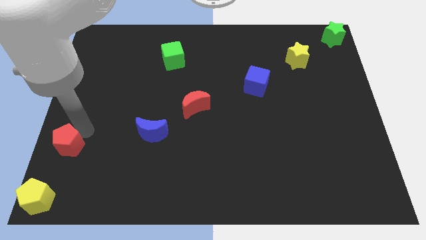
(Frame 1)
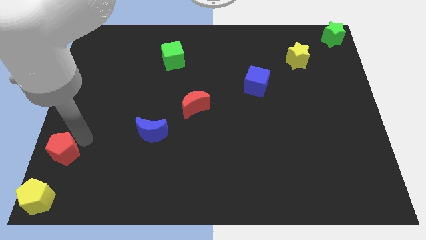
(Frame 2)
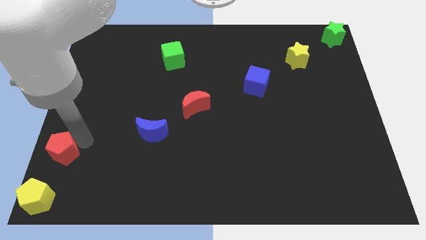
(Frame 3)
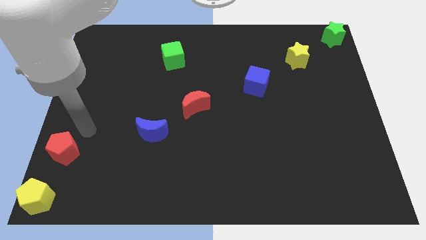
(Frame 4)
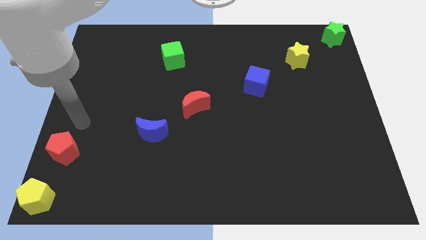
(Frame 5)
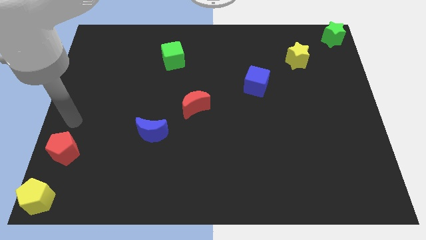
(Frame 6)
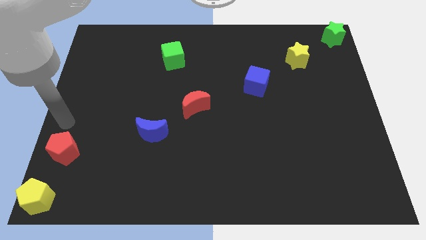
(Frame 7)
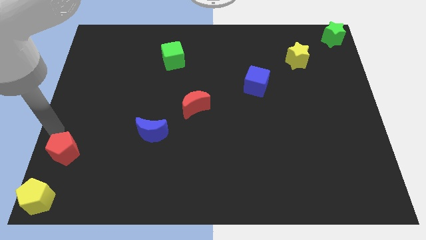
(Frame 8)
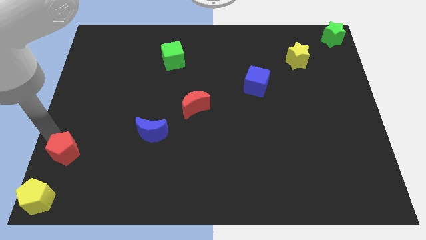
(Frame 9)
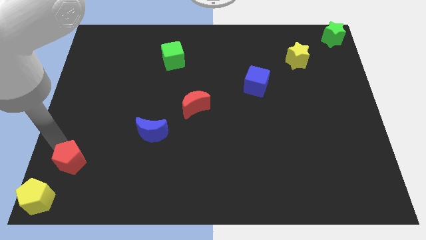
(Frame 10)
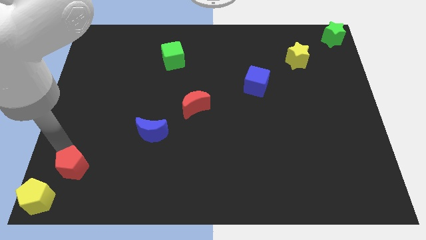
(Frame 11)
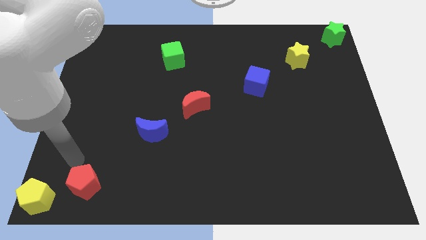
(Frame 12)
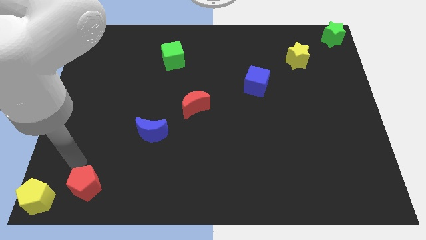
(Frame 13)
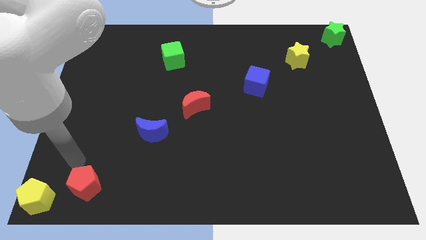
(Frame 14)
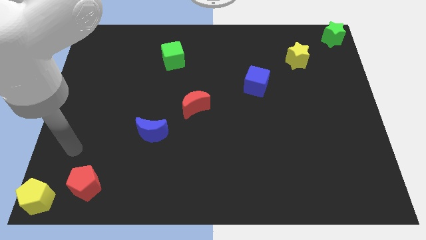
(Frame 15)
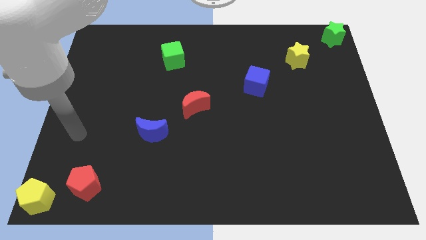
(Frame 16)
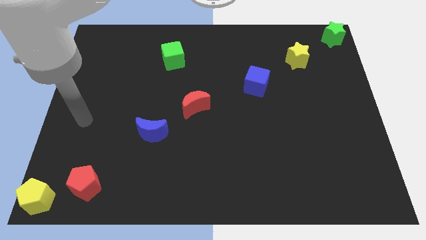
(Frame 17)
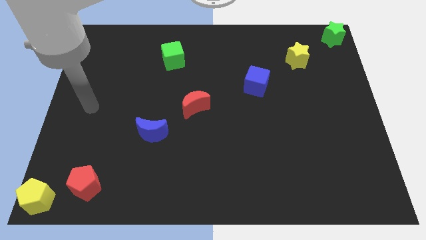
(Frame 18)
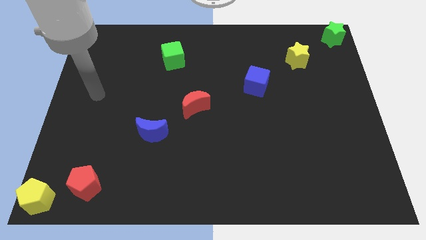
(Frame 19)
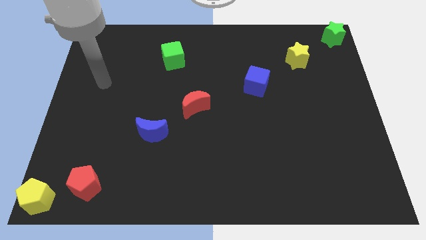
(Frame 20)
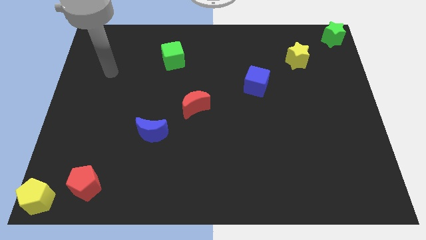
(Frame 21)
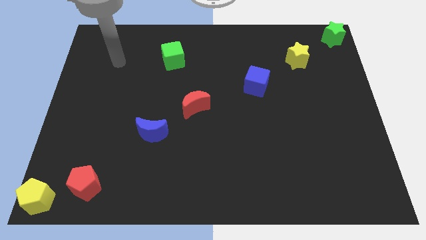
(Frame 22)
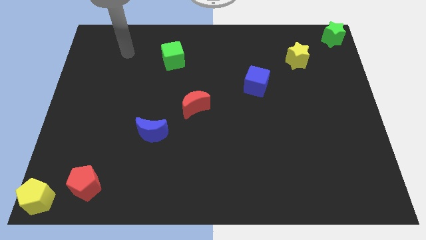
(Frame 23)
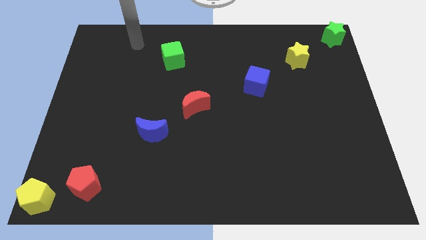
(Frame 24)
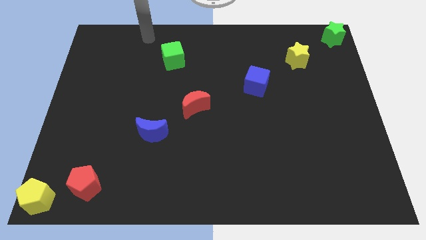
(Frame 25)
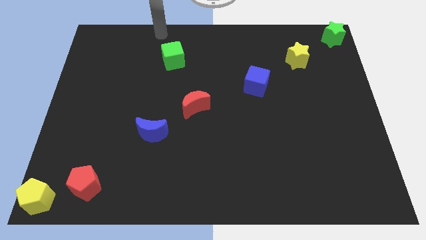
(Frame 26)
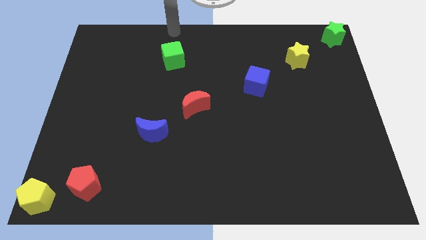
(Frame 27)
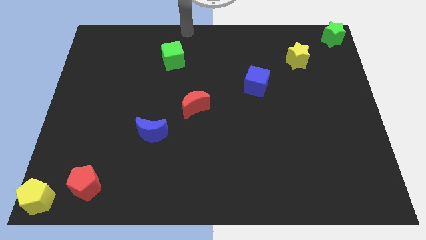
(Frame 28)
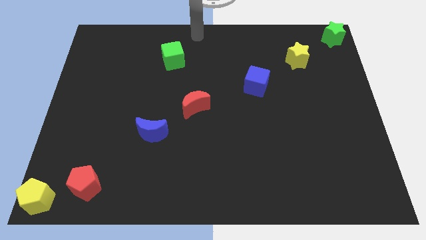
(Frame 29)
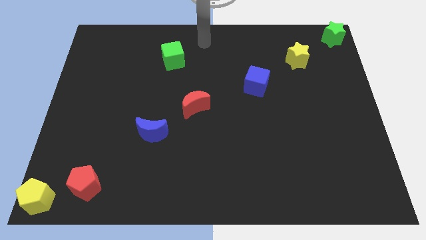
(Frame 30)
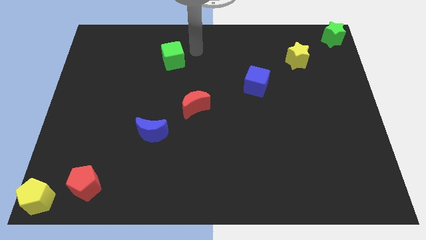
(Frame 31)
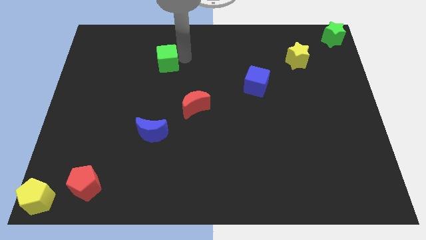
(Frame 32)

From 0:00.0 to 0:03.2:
put the red pentagon diagonally top right to the yellow pentagon

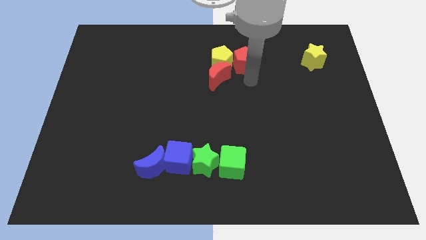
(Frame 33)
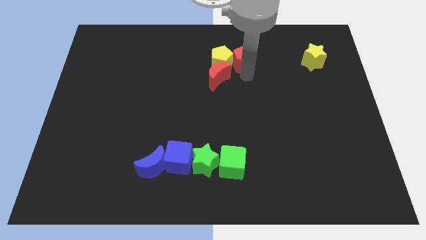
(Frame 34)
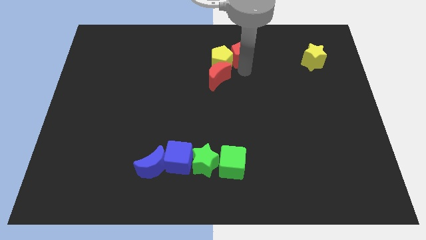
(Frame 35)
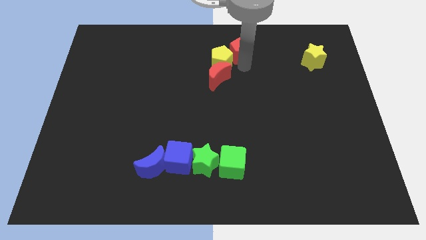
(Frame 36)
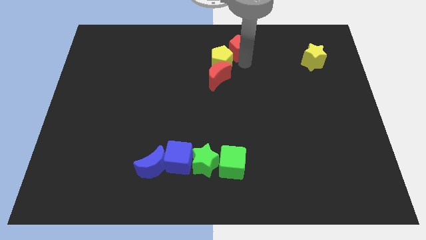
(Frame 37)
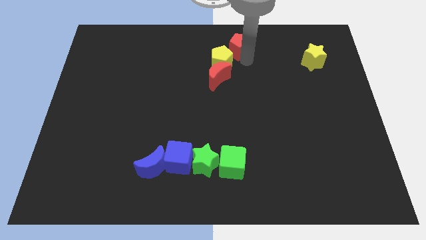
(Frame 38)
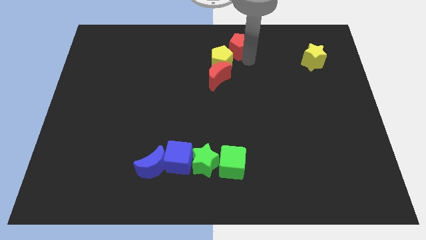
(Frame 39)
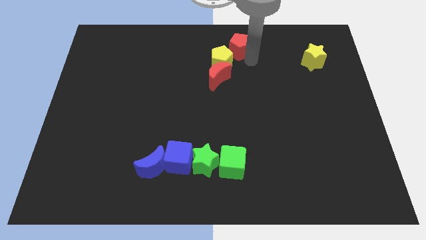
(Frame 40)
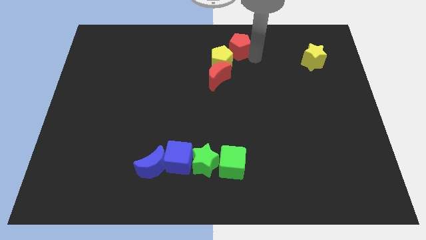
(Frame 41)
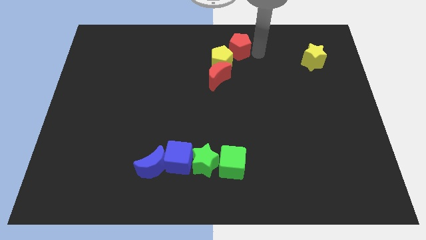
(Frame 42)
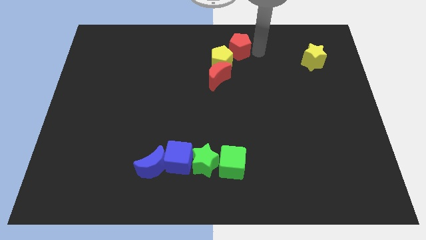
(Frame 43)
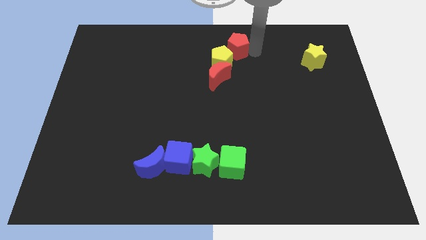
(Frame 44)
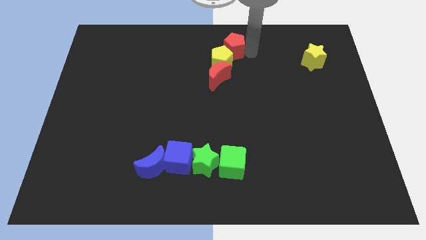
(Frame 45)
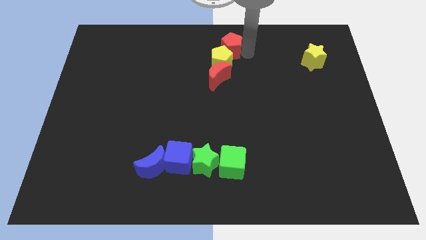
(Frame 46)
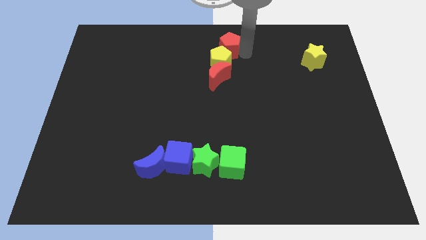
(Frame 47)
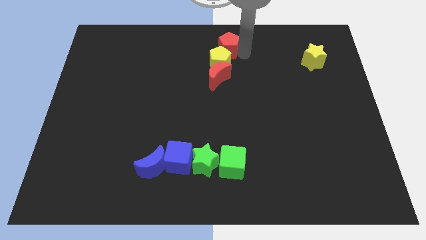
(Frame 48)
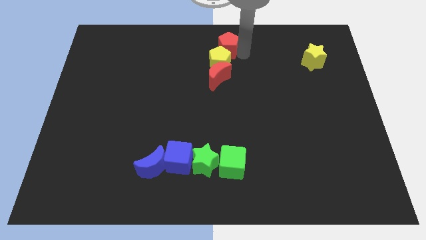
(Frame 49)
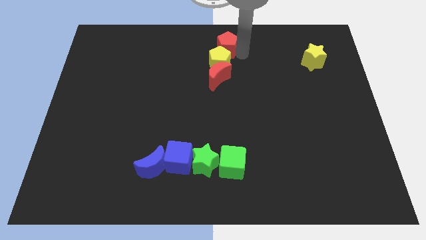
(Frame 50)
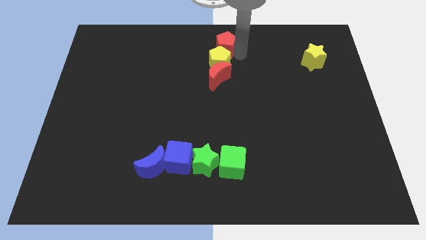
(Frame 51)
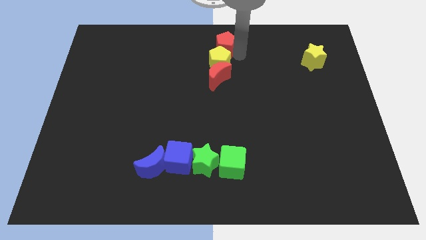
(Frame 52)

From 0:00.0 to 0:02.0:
place the red pentagon above to the yellow pentagon

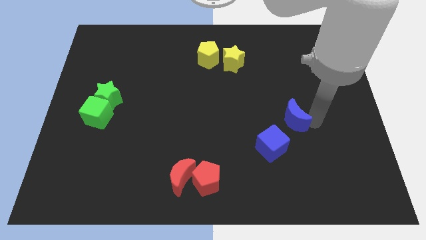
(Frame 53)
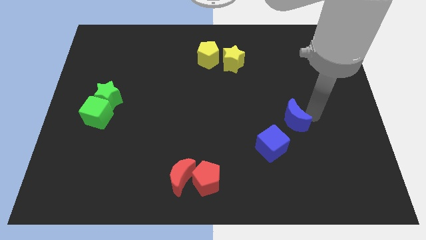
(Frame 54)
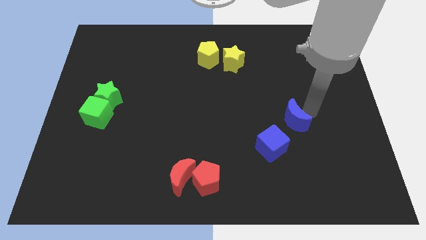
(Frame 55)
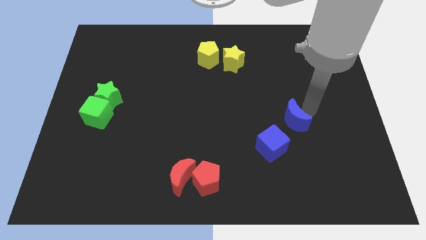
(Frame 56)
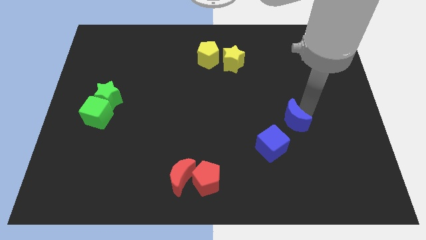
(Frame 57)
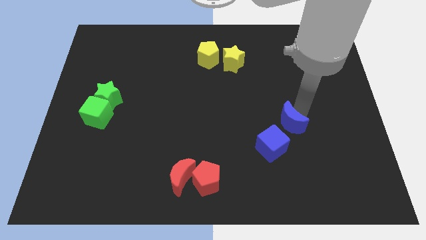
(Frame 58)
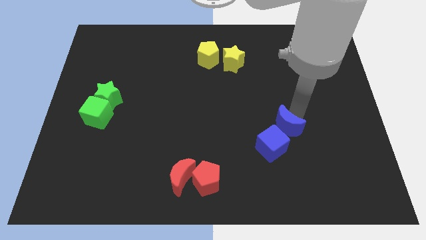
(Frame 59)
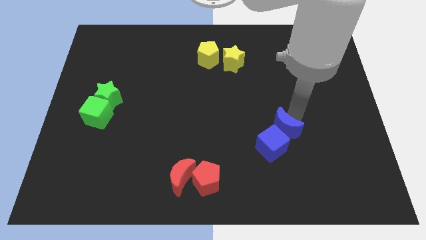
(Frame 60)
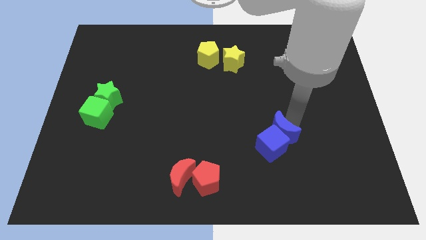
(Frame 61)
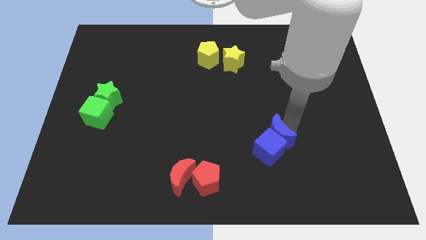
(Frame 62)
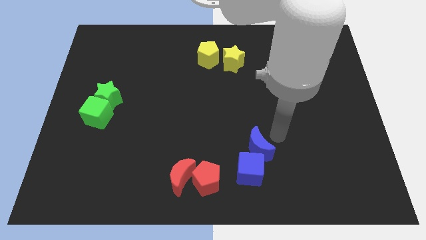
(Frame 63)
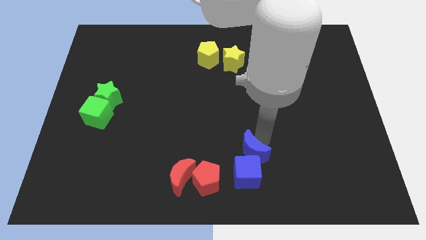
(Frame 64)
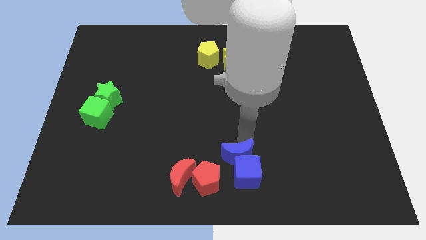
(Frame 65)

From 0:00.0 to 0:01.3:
push the blue moon into blue cube

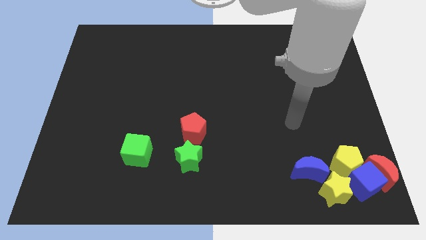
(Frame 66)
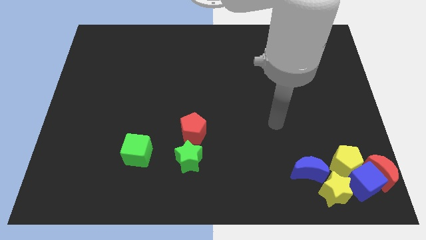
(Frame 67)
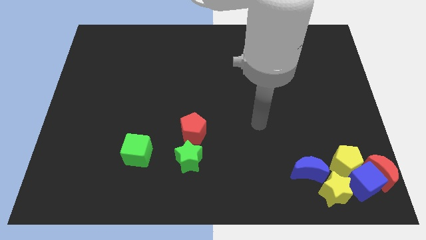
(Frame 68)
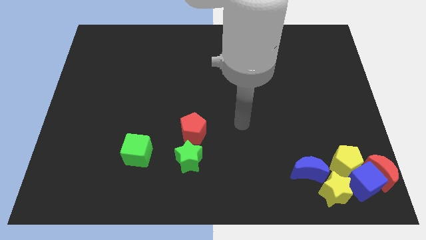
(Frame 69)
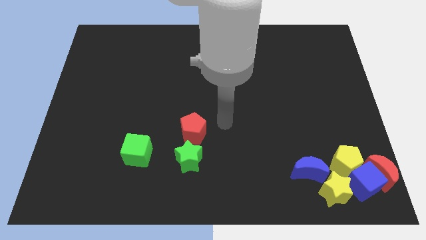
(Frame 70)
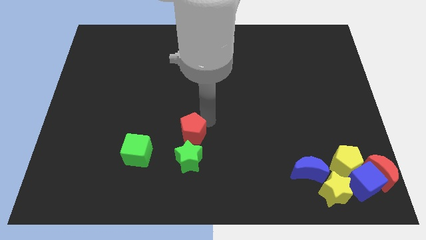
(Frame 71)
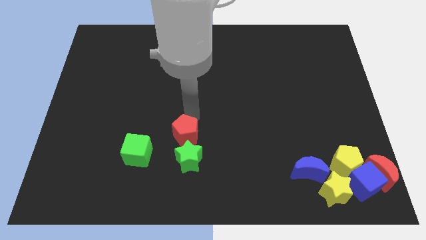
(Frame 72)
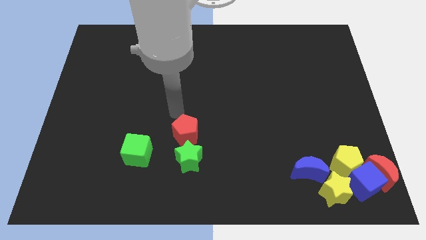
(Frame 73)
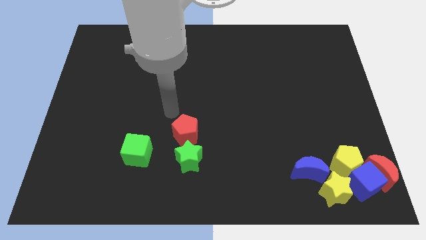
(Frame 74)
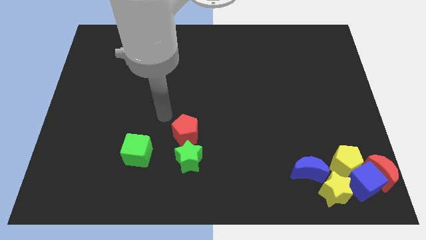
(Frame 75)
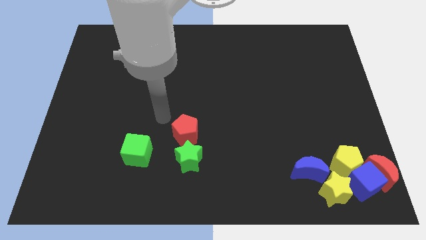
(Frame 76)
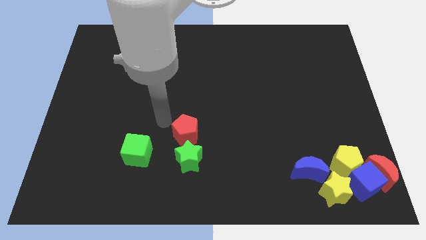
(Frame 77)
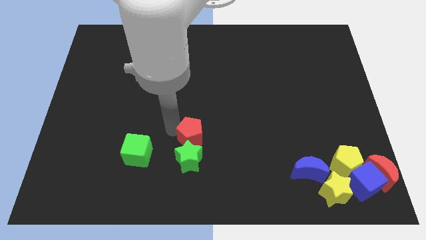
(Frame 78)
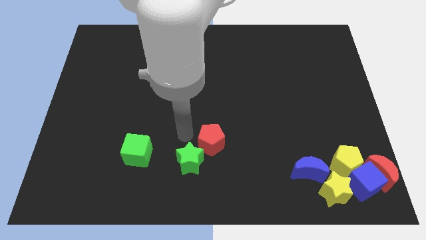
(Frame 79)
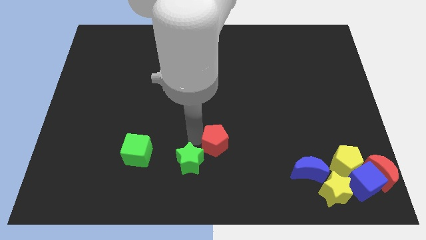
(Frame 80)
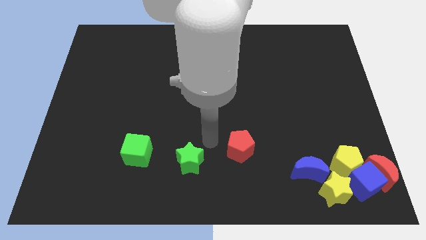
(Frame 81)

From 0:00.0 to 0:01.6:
push the red pentagon away from the green star

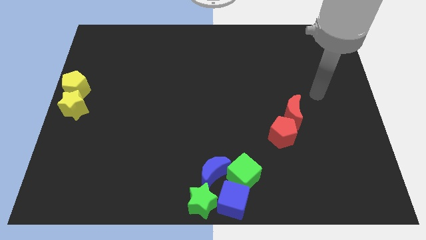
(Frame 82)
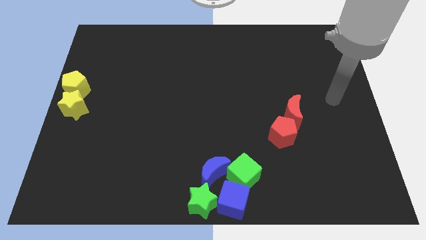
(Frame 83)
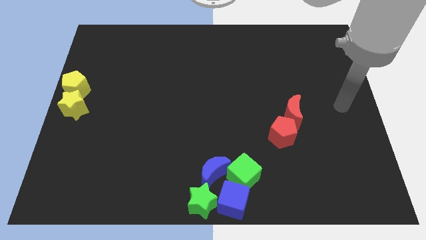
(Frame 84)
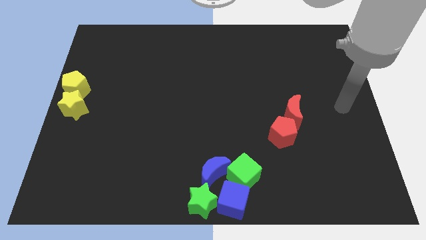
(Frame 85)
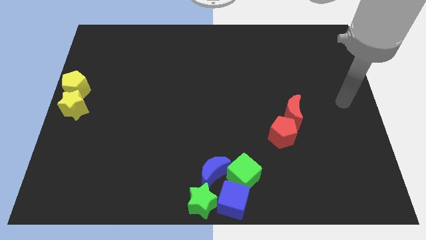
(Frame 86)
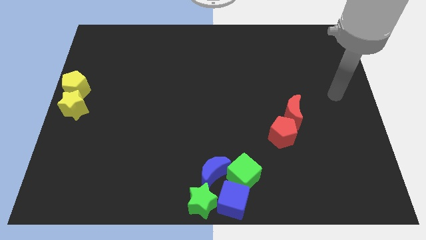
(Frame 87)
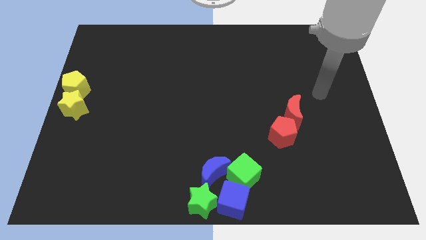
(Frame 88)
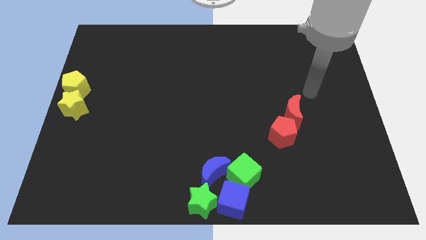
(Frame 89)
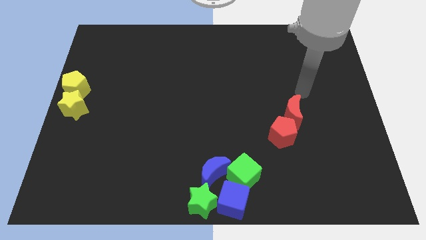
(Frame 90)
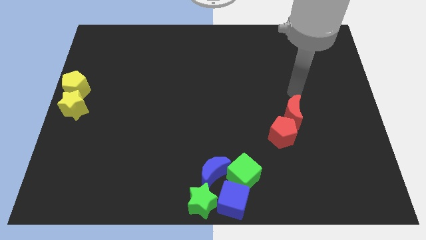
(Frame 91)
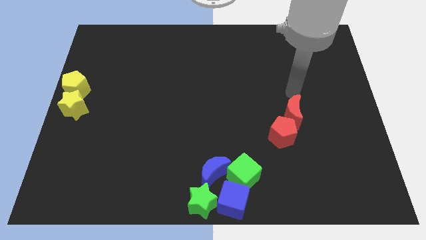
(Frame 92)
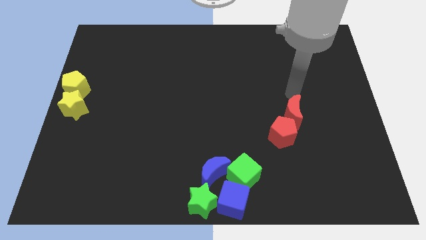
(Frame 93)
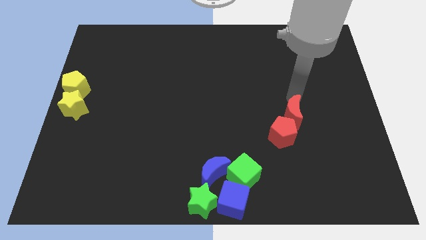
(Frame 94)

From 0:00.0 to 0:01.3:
place your arm at the top side of the red moon
